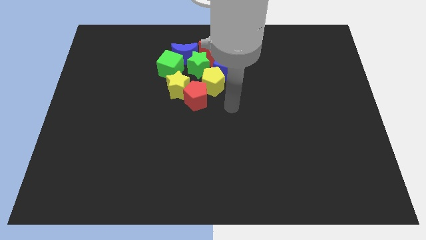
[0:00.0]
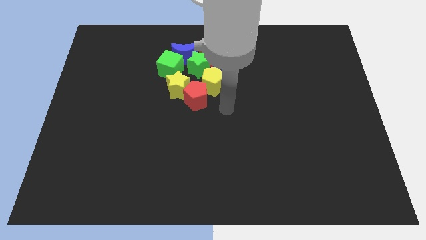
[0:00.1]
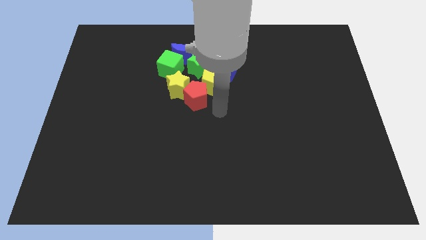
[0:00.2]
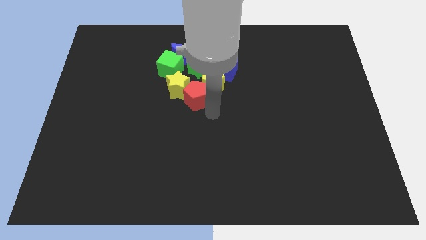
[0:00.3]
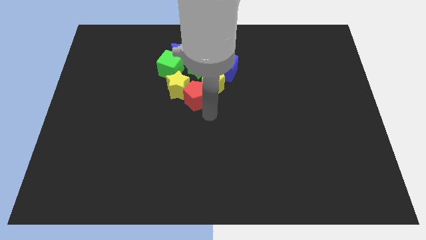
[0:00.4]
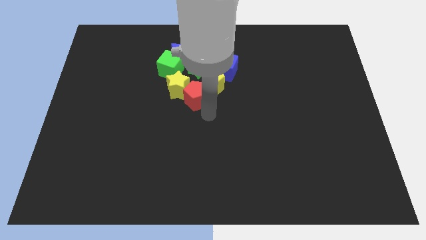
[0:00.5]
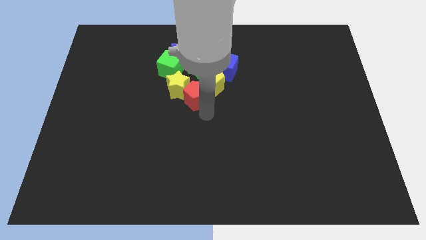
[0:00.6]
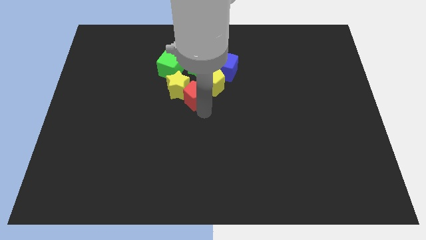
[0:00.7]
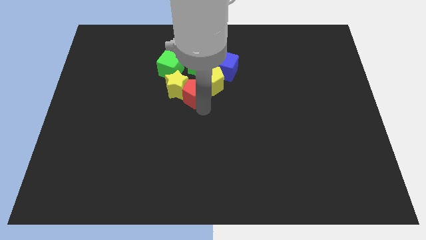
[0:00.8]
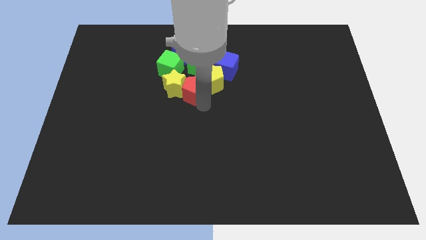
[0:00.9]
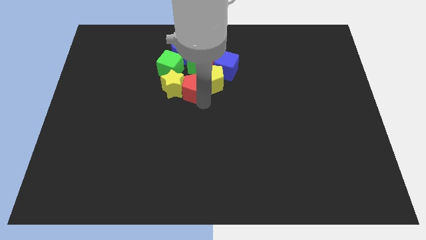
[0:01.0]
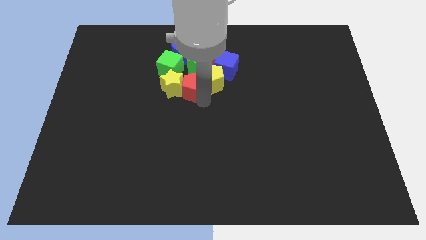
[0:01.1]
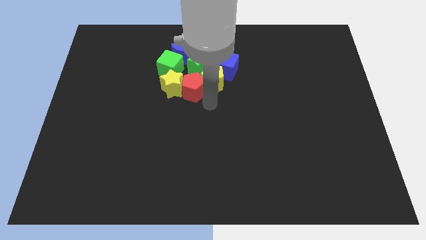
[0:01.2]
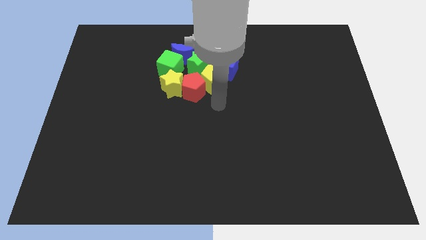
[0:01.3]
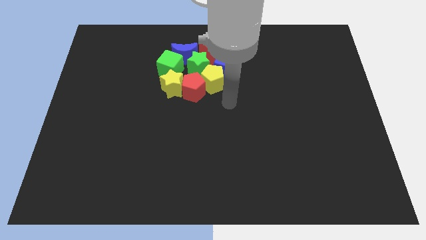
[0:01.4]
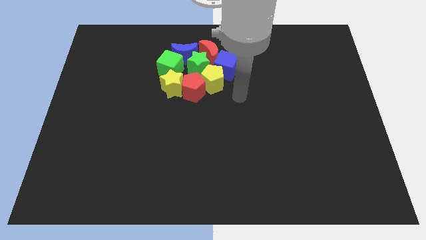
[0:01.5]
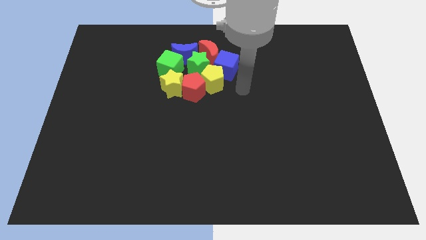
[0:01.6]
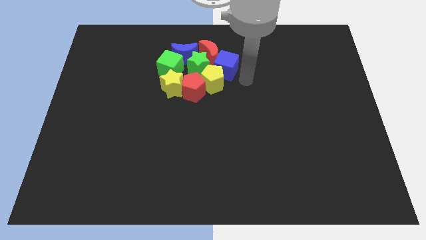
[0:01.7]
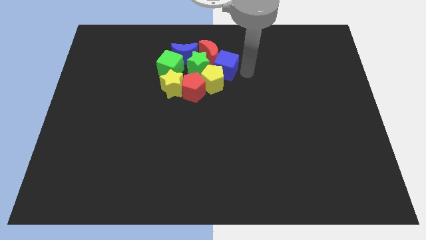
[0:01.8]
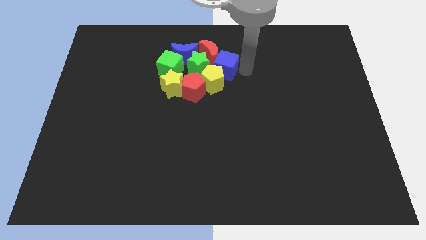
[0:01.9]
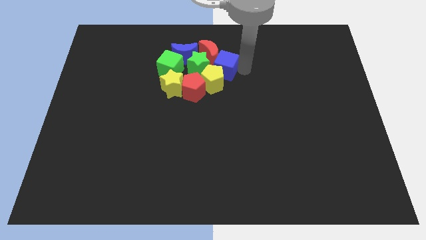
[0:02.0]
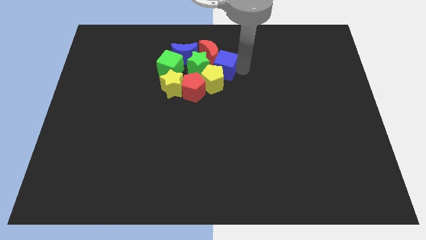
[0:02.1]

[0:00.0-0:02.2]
adjust the red pentagon in the group of blocks

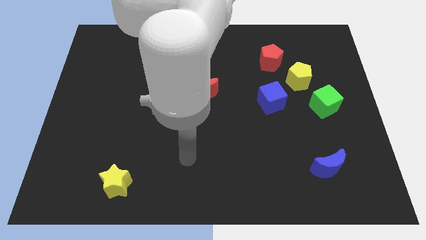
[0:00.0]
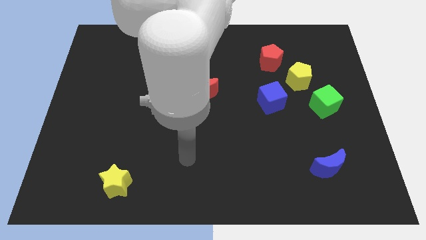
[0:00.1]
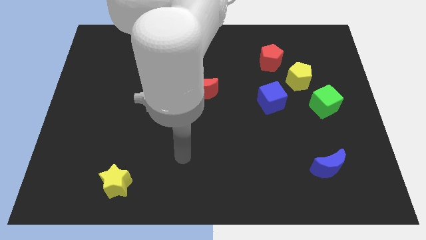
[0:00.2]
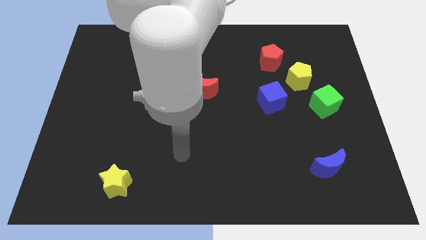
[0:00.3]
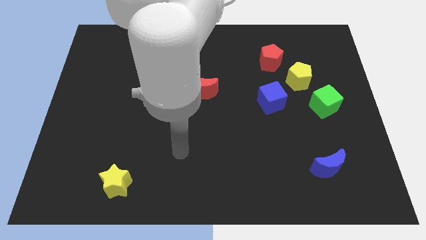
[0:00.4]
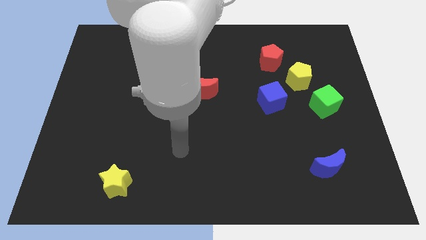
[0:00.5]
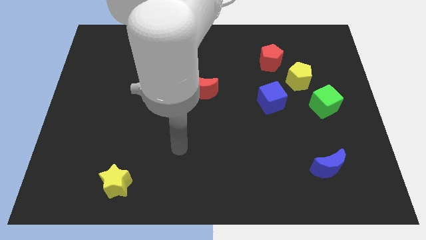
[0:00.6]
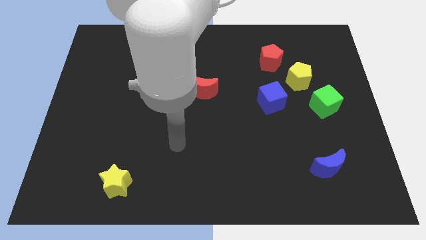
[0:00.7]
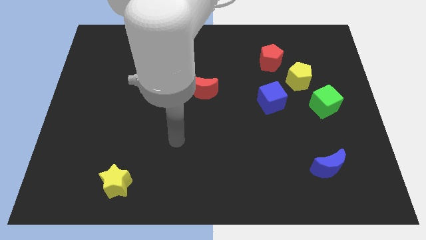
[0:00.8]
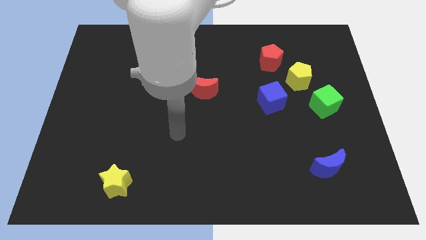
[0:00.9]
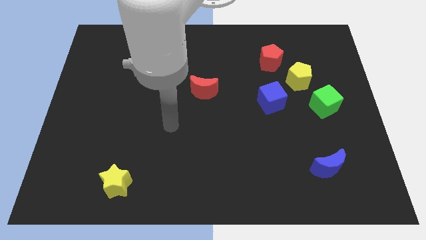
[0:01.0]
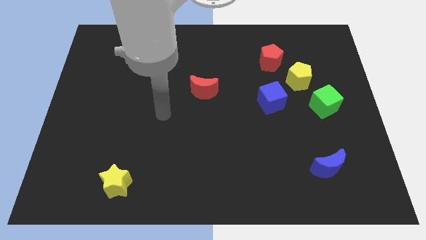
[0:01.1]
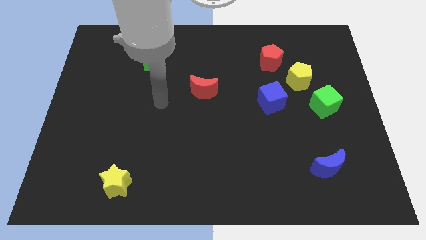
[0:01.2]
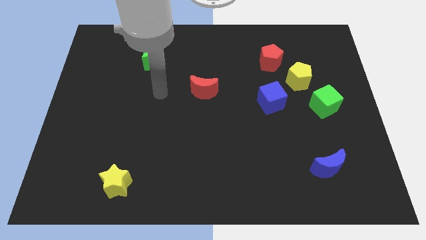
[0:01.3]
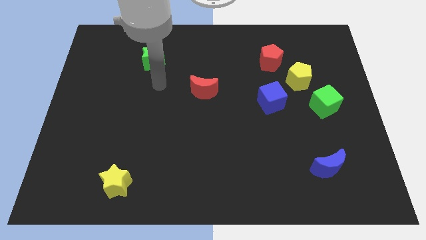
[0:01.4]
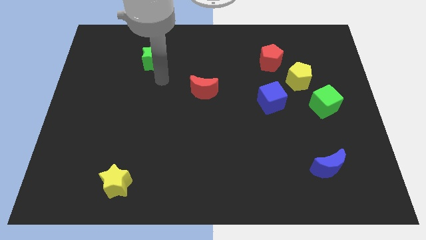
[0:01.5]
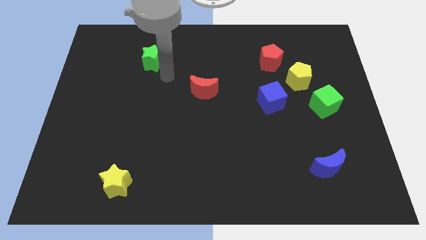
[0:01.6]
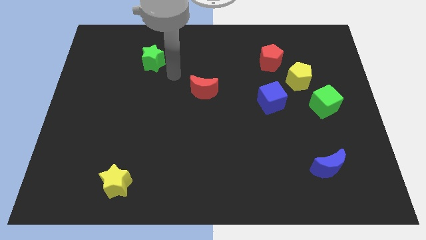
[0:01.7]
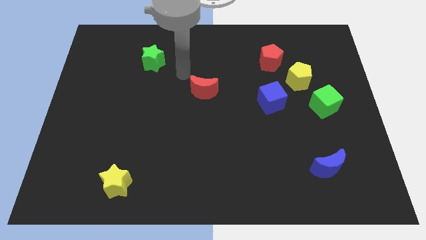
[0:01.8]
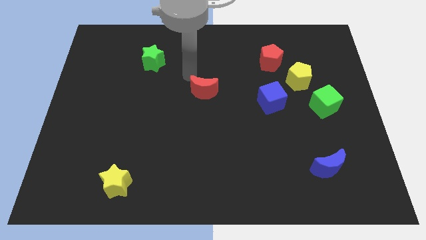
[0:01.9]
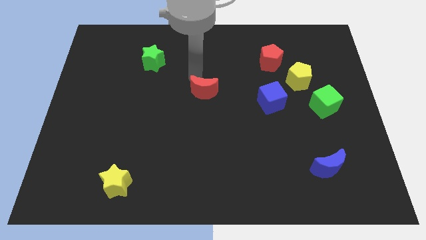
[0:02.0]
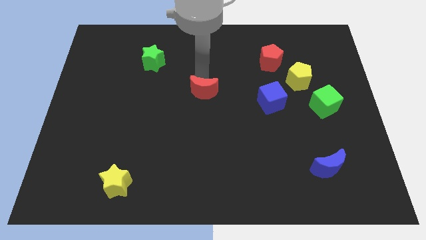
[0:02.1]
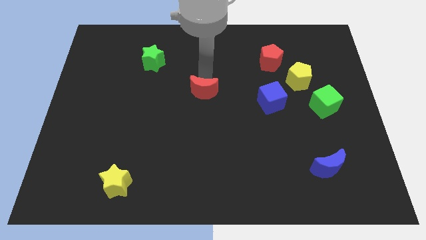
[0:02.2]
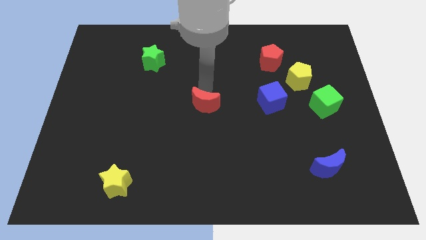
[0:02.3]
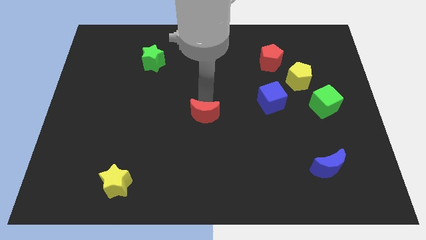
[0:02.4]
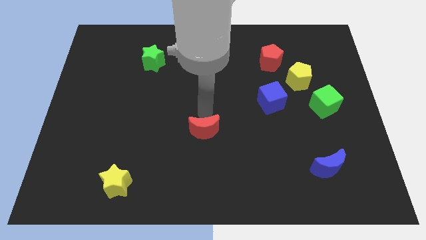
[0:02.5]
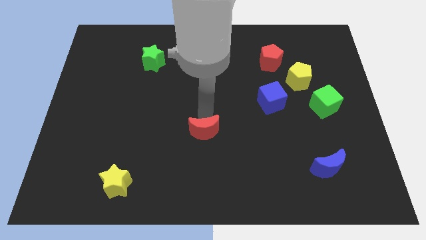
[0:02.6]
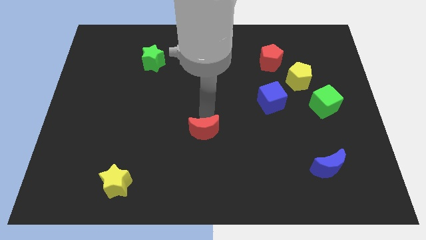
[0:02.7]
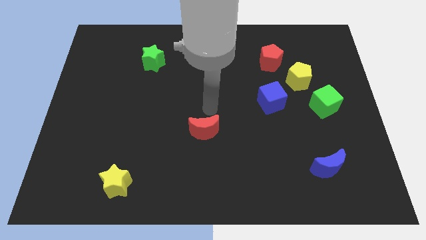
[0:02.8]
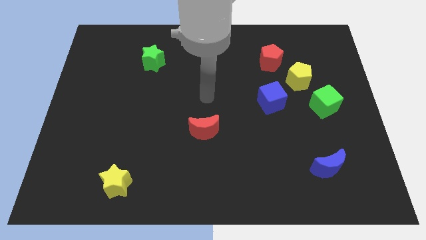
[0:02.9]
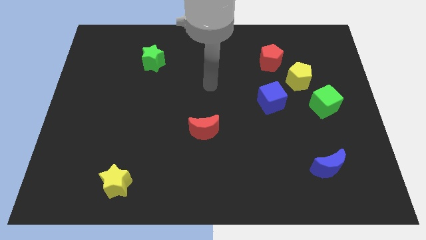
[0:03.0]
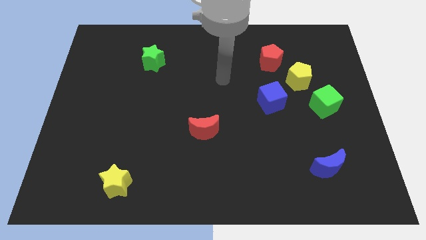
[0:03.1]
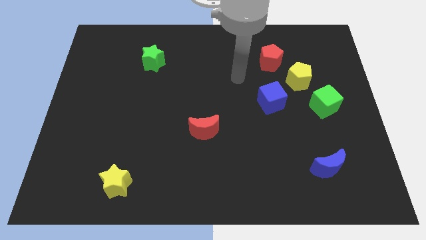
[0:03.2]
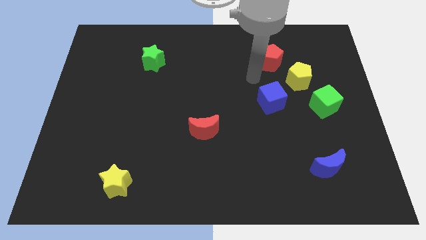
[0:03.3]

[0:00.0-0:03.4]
push red moon towards bottom

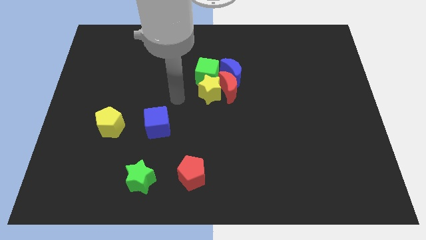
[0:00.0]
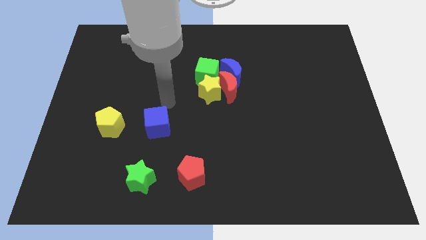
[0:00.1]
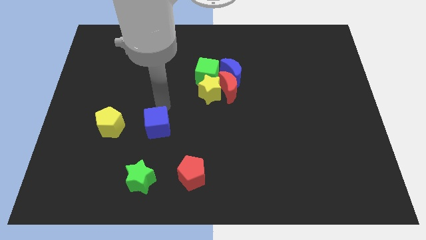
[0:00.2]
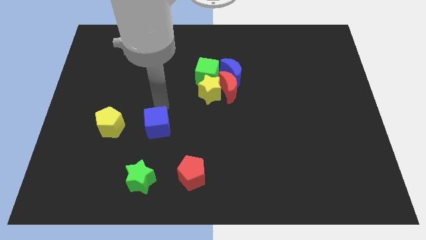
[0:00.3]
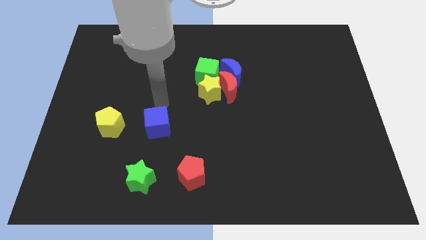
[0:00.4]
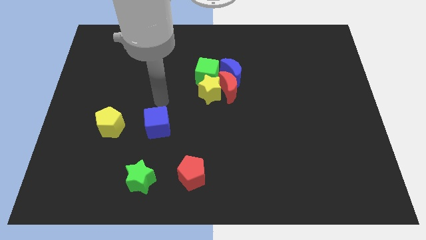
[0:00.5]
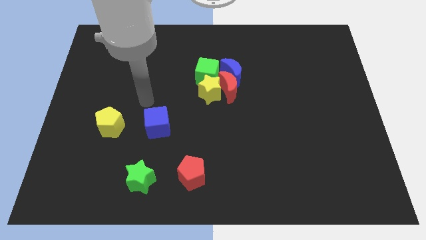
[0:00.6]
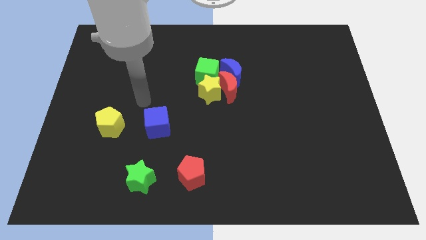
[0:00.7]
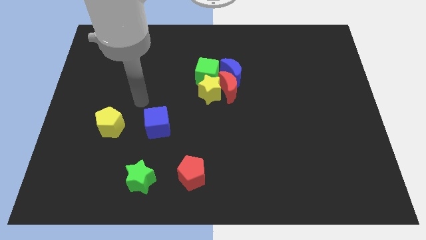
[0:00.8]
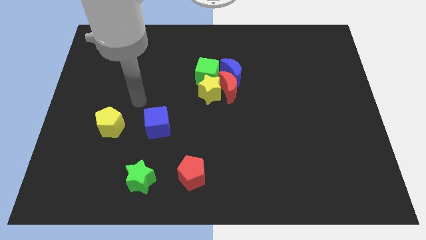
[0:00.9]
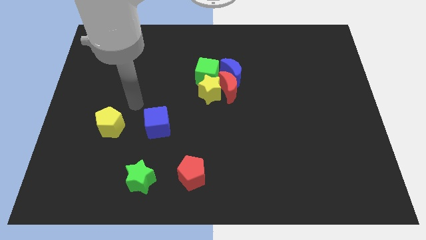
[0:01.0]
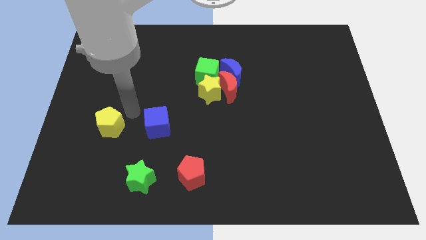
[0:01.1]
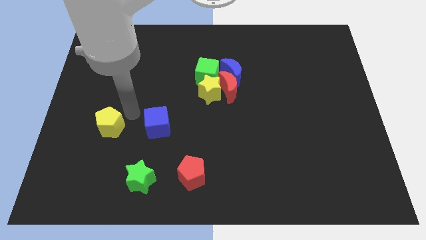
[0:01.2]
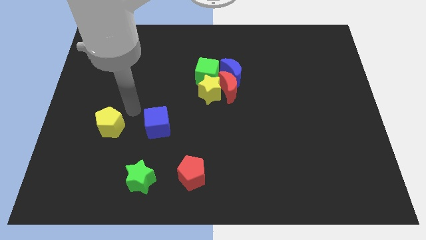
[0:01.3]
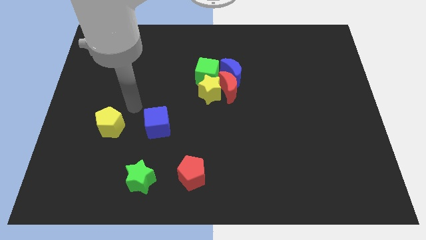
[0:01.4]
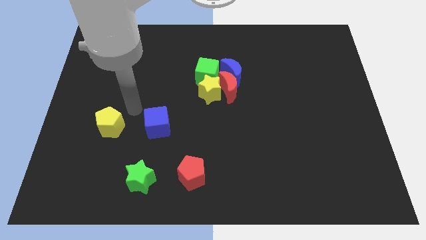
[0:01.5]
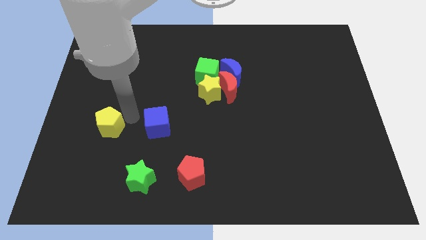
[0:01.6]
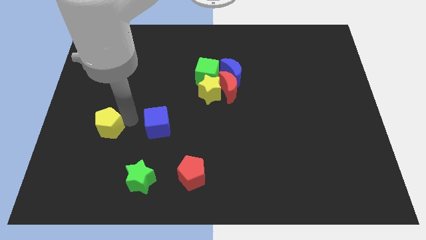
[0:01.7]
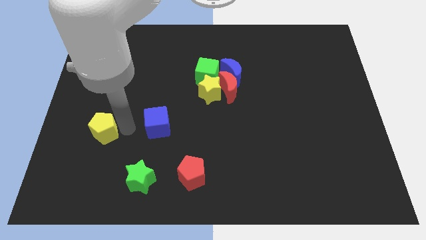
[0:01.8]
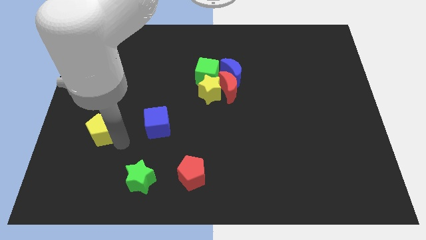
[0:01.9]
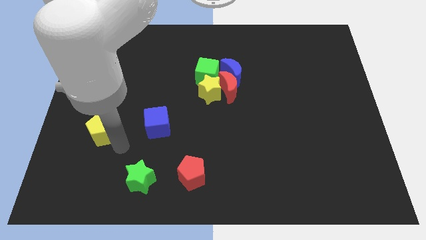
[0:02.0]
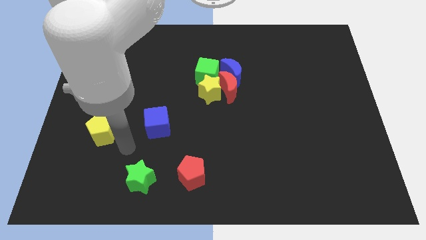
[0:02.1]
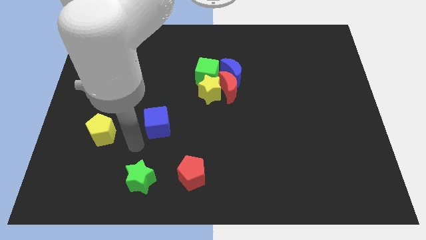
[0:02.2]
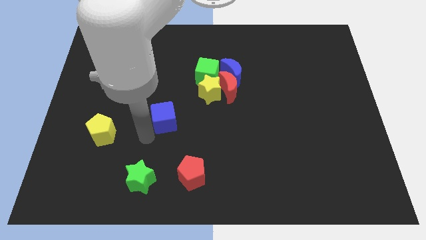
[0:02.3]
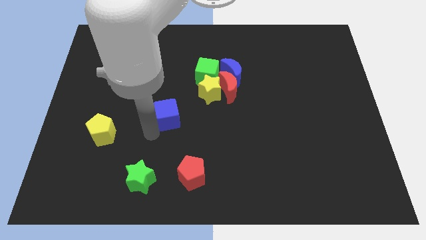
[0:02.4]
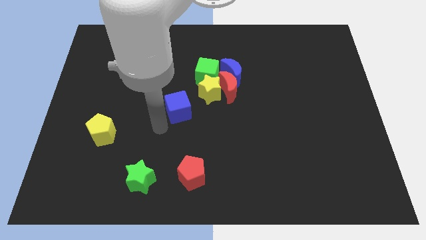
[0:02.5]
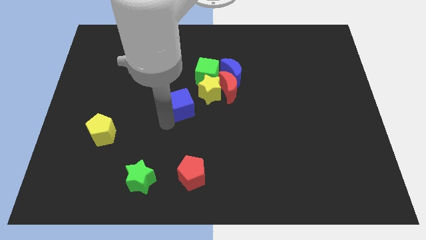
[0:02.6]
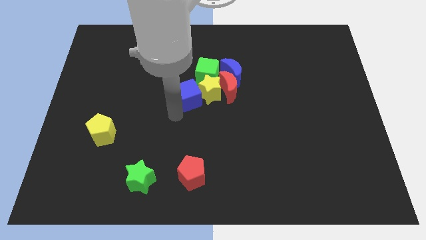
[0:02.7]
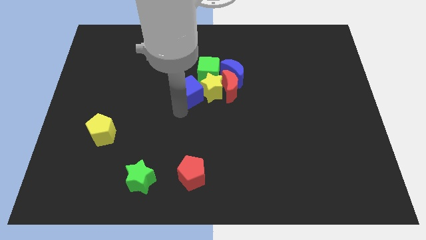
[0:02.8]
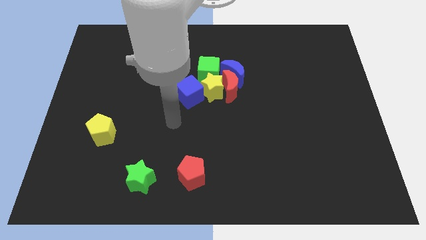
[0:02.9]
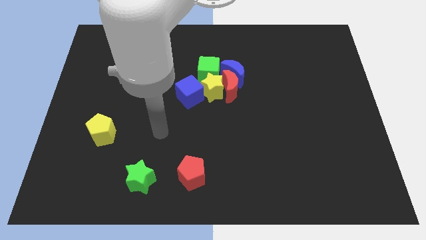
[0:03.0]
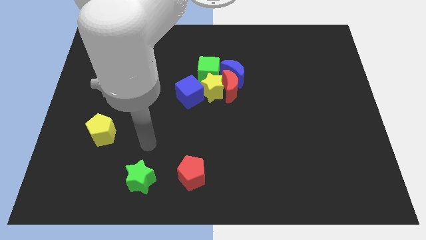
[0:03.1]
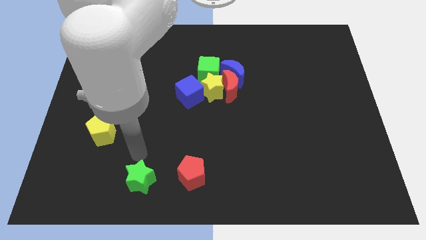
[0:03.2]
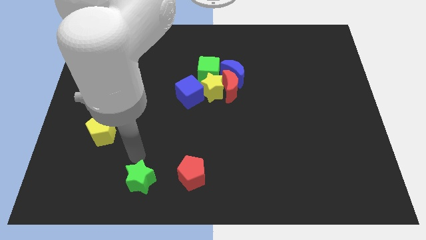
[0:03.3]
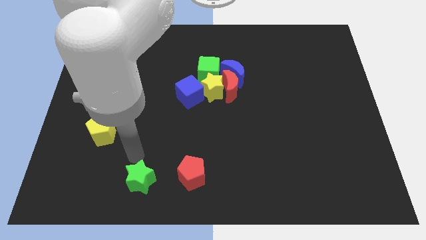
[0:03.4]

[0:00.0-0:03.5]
push blue cube in to yellow star

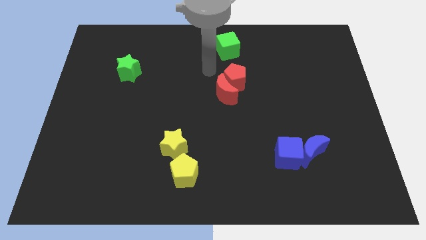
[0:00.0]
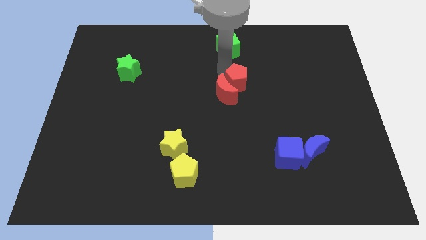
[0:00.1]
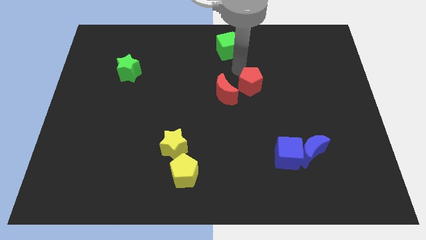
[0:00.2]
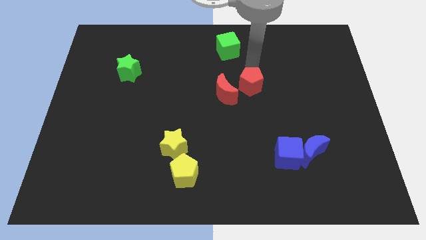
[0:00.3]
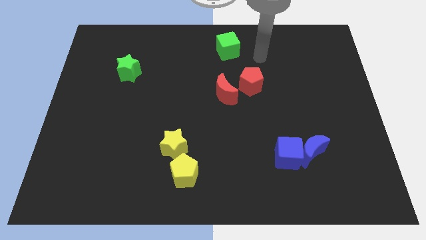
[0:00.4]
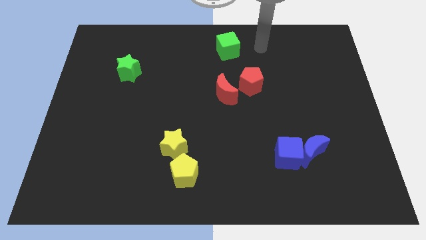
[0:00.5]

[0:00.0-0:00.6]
separate the group of red blocks
